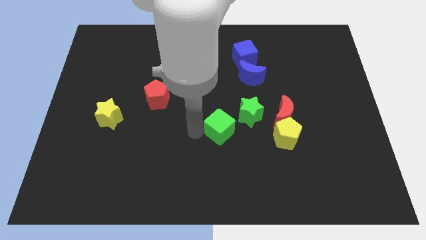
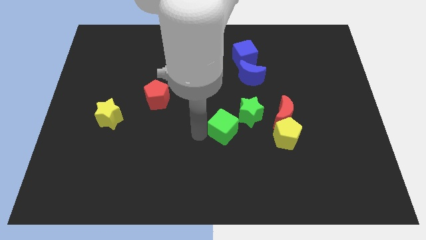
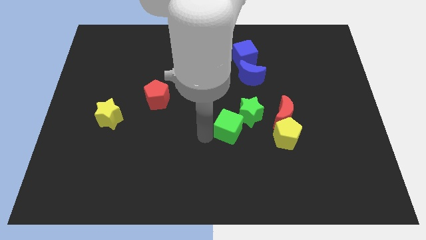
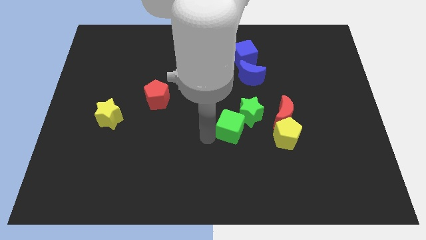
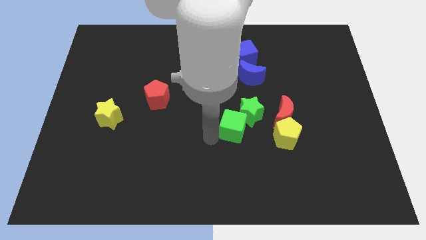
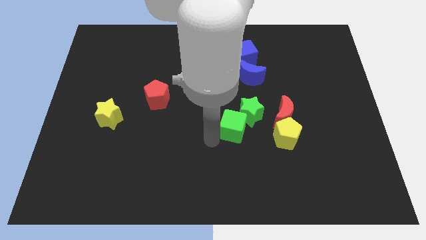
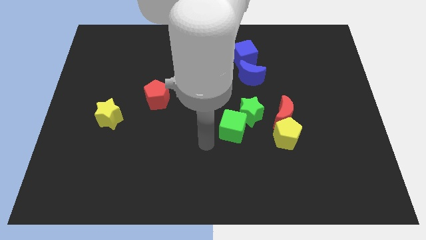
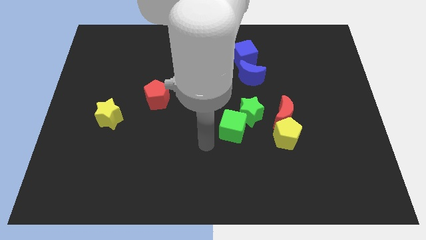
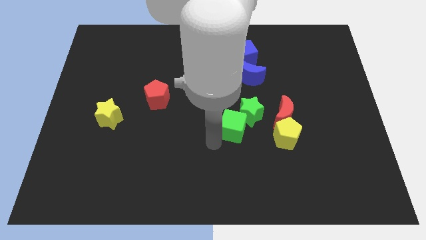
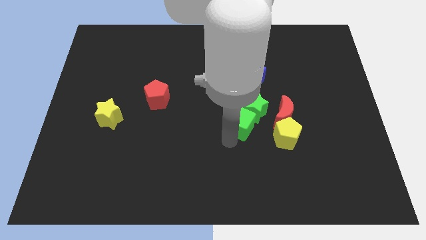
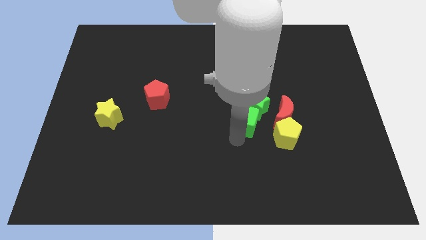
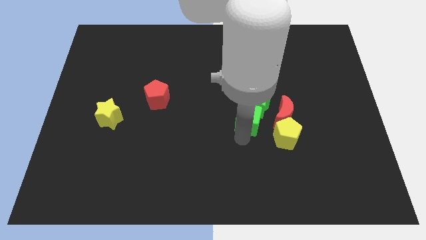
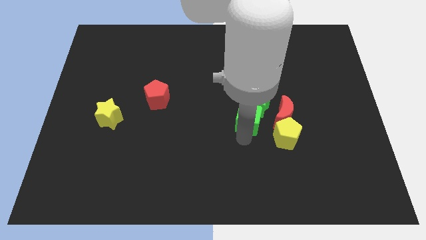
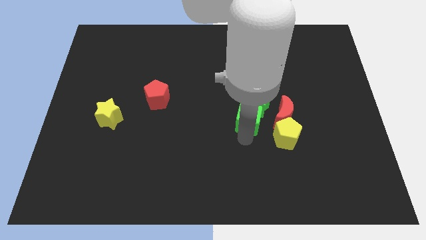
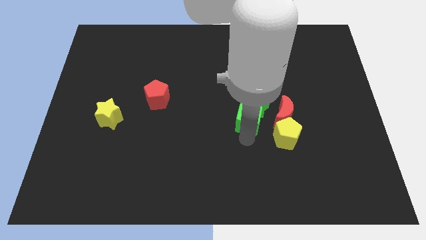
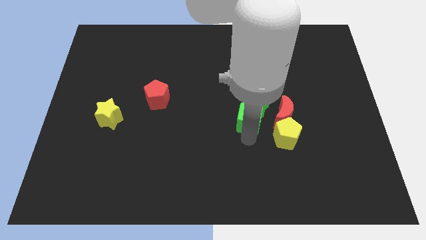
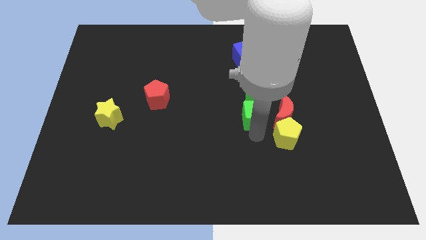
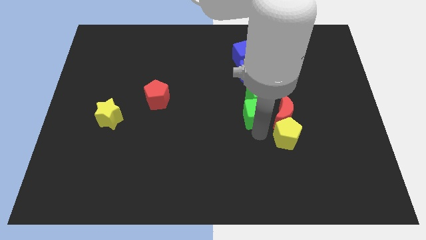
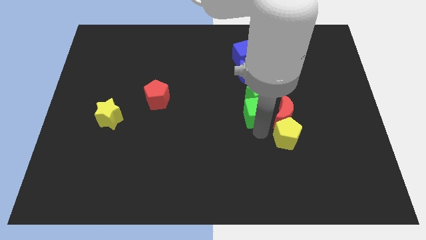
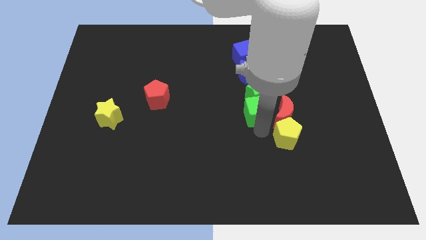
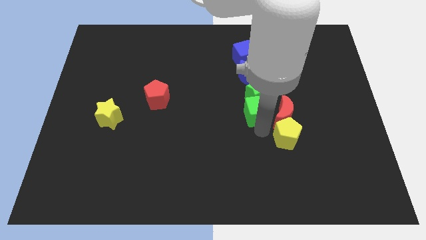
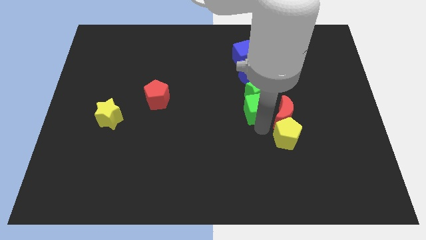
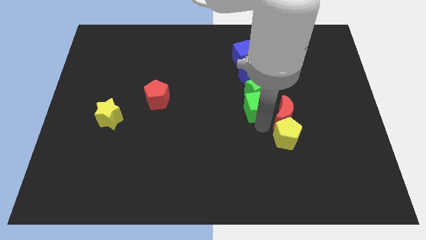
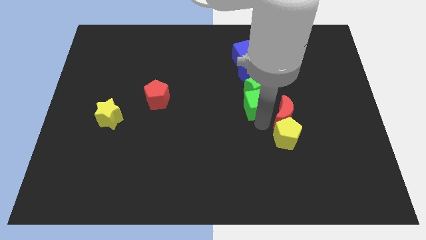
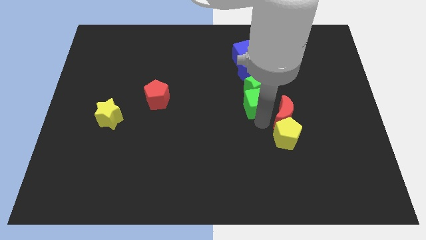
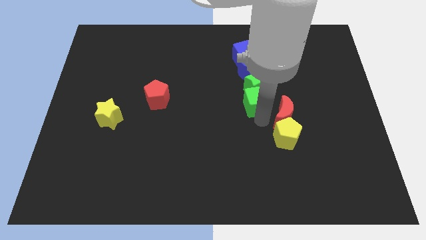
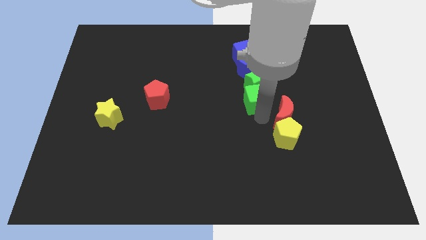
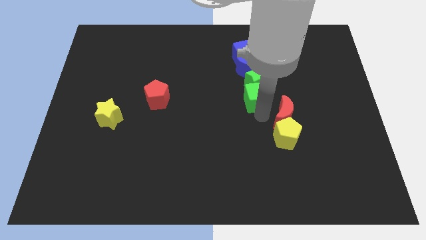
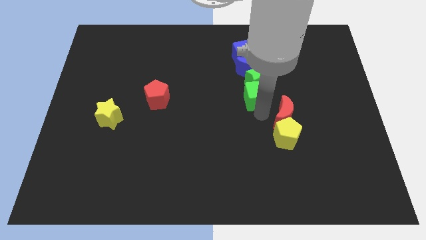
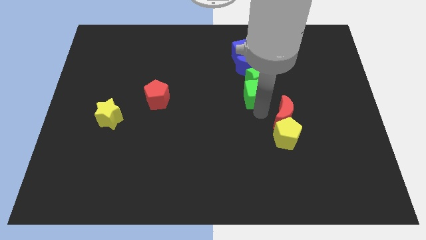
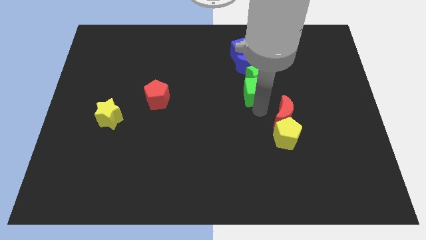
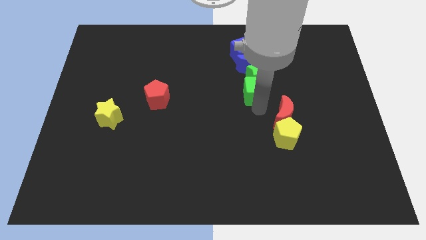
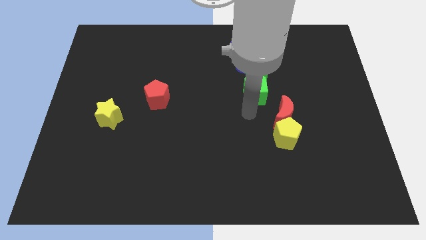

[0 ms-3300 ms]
push the green cube and green star into the group of blue blocks

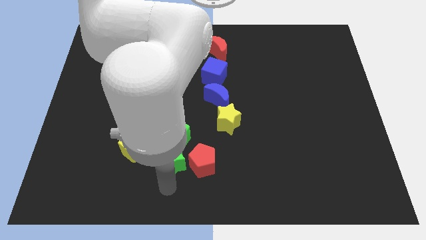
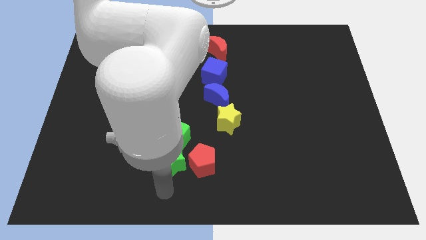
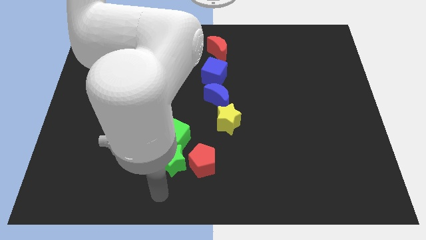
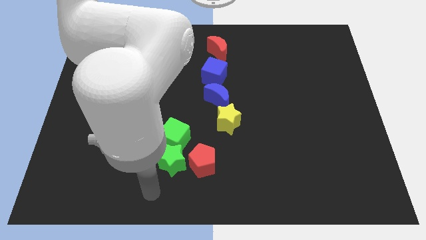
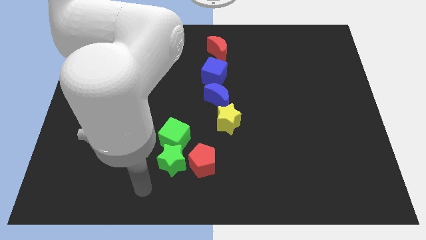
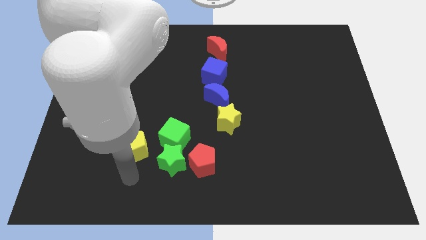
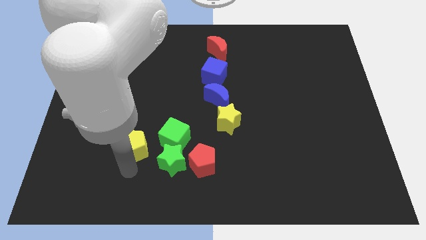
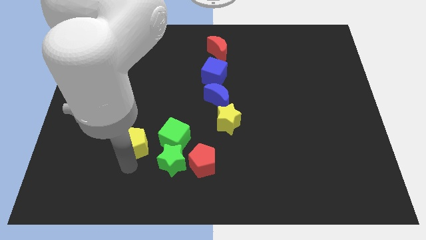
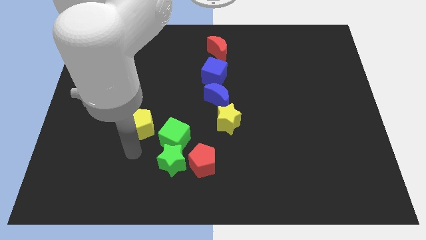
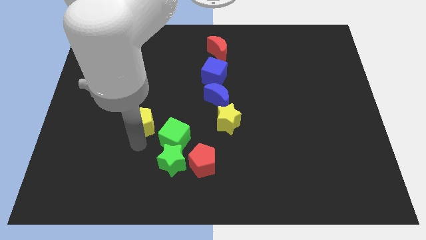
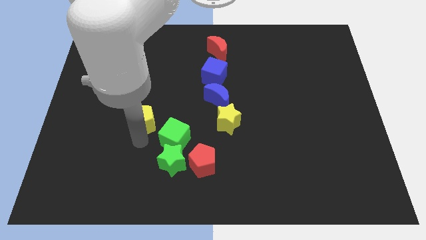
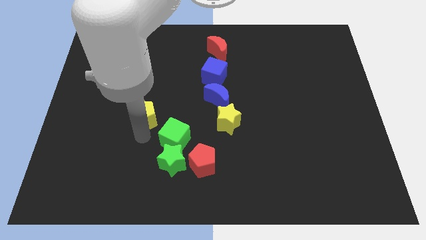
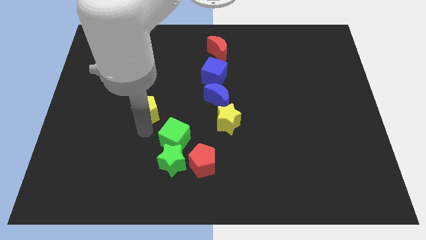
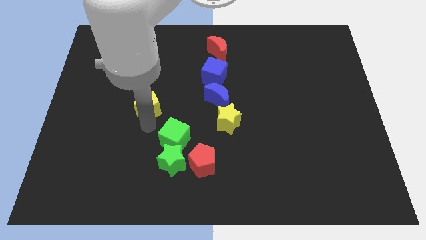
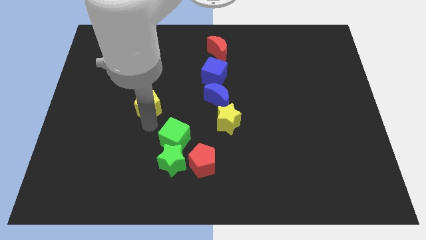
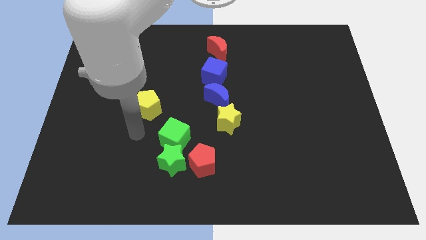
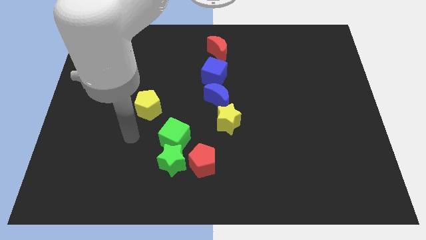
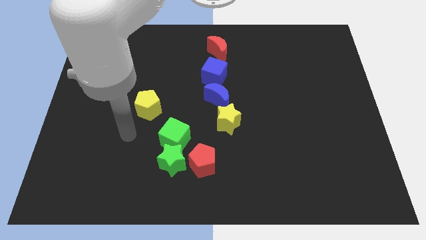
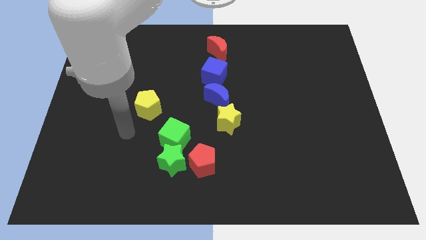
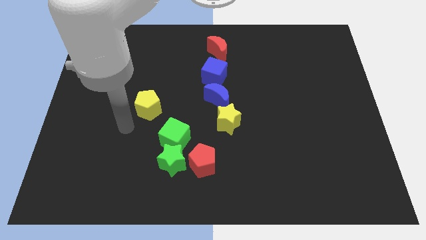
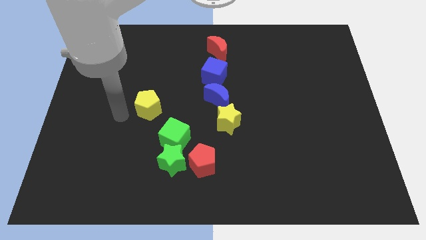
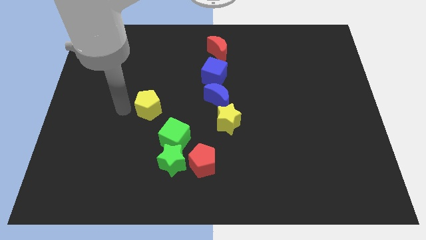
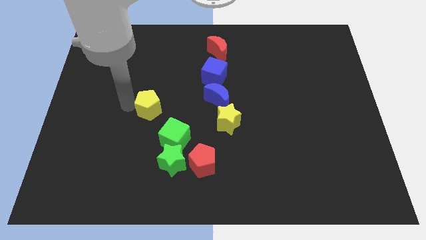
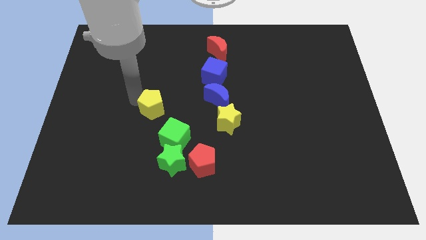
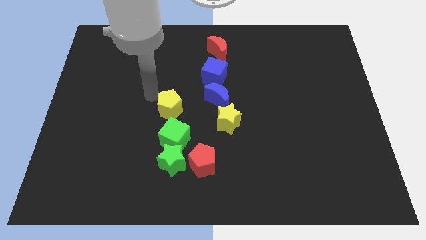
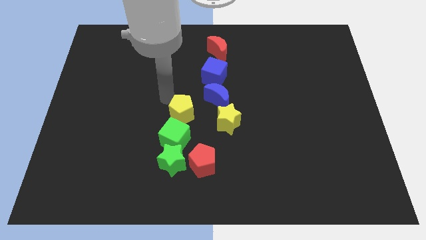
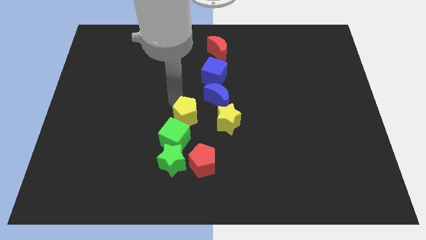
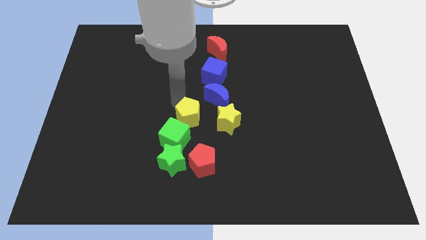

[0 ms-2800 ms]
push the yellow pentagon to the top of the green cube

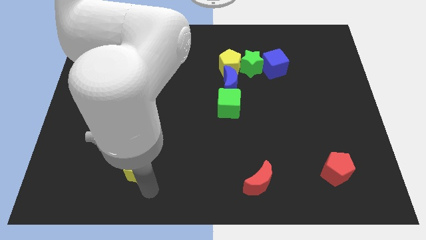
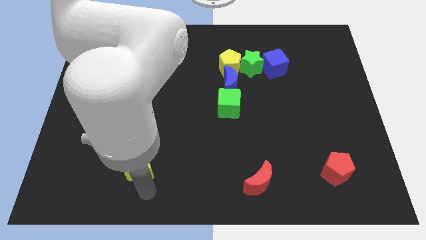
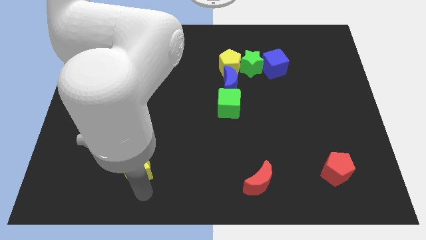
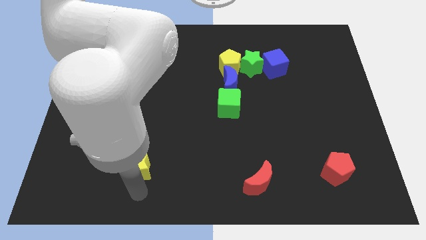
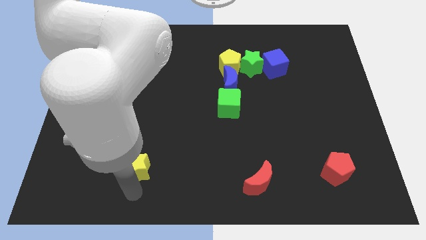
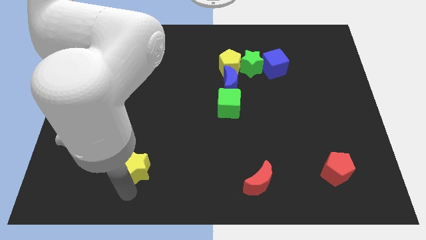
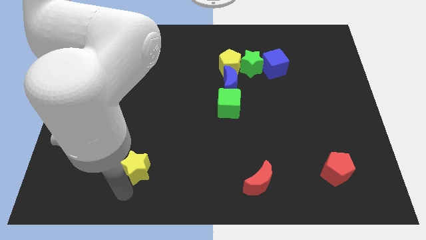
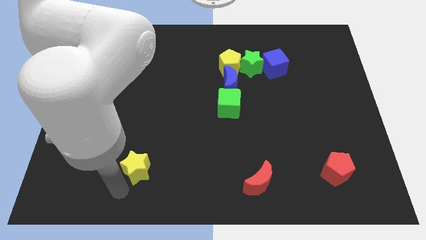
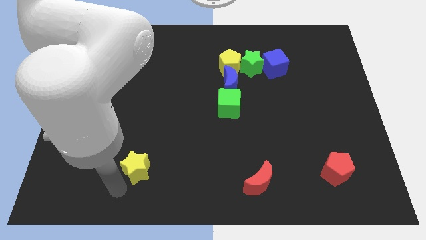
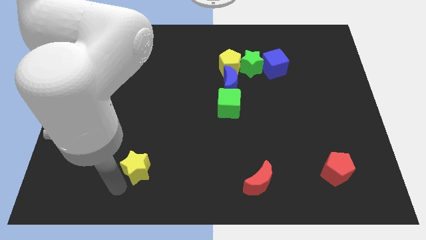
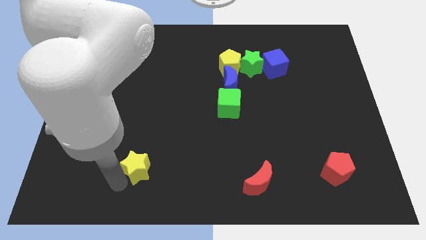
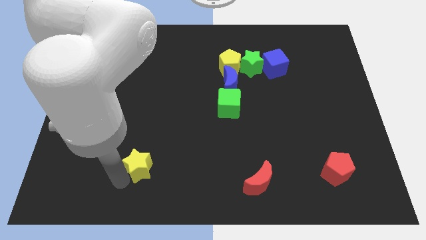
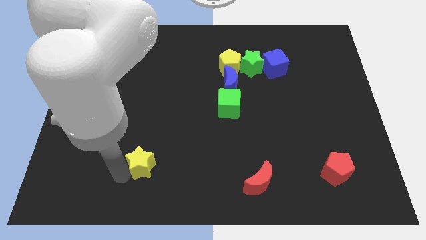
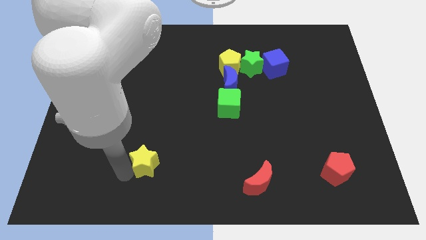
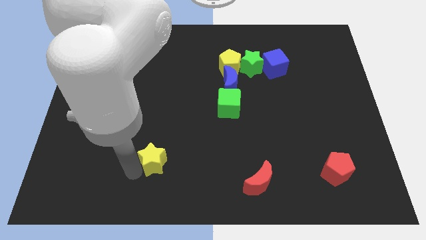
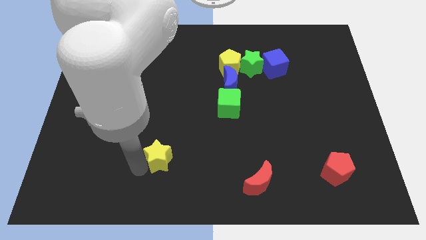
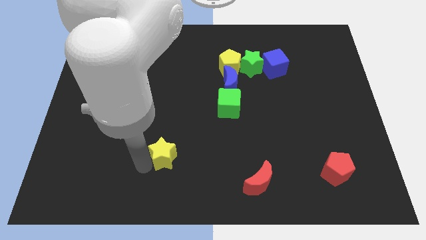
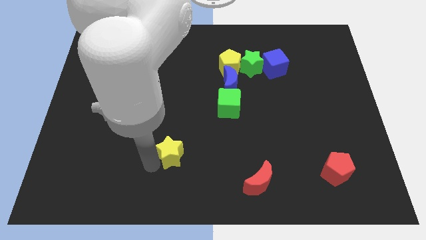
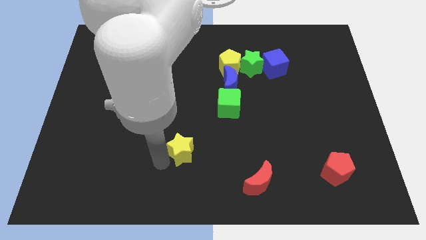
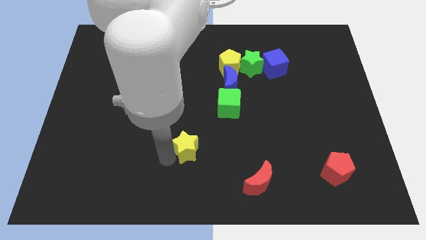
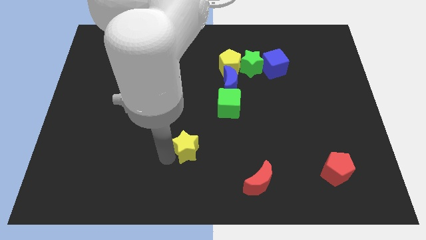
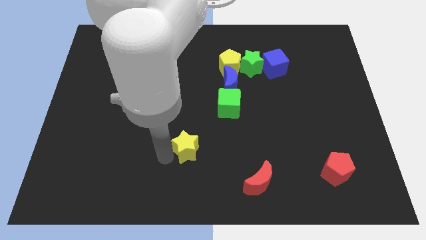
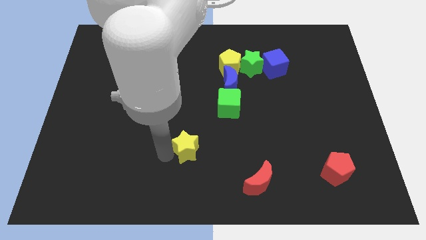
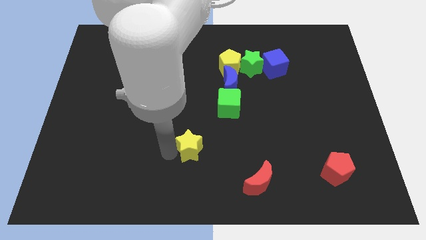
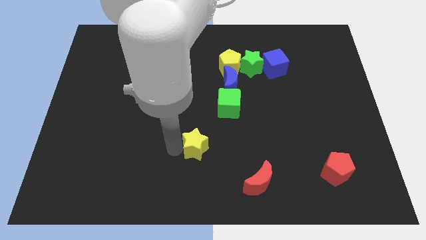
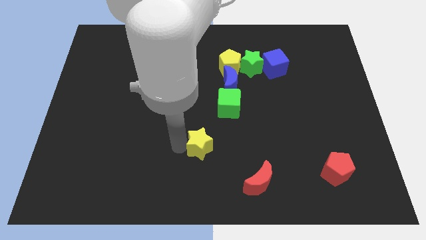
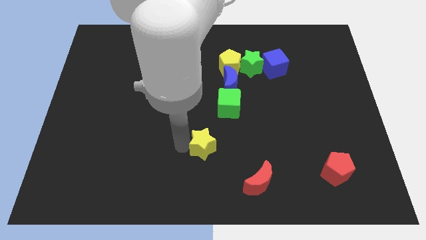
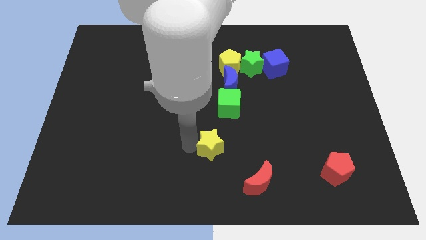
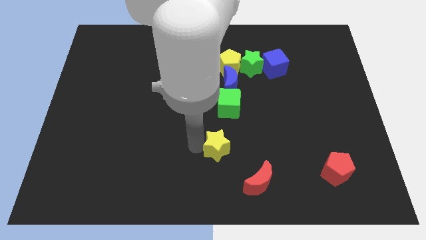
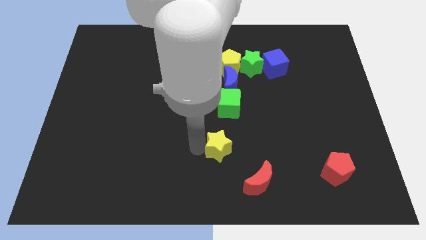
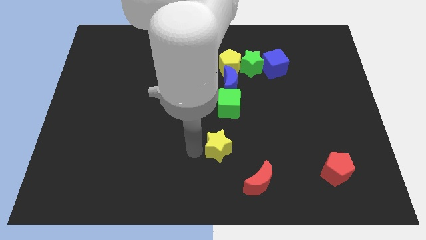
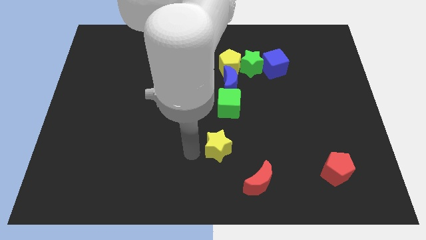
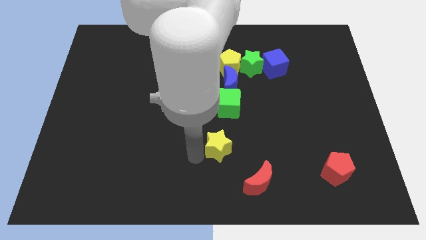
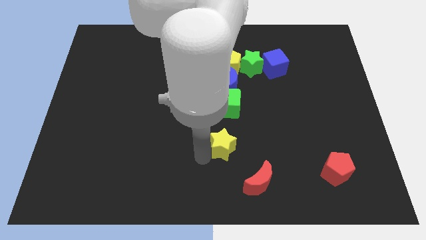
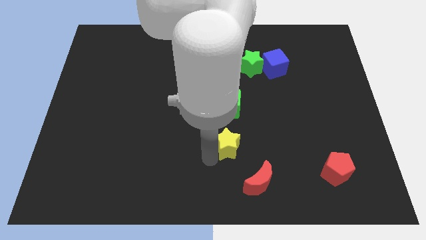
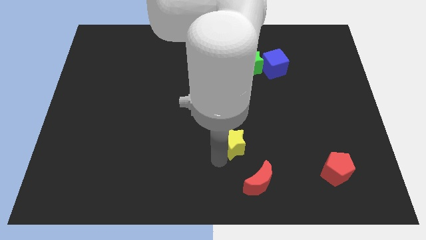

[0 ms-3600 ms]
push the yellow star to the bottom of the green cube
